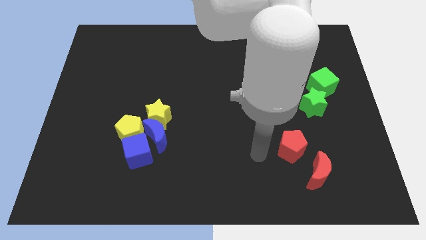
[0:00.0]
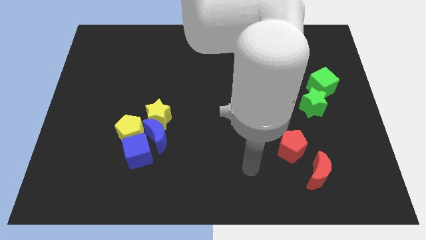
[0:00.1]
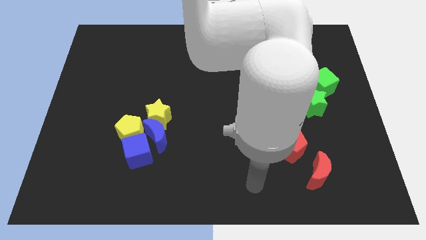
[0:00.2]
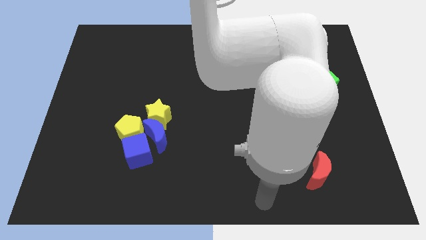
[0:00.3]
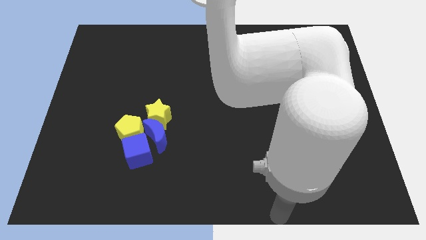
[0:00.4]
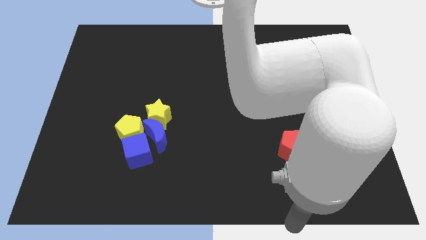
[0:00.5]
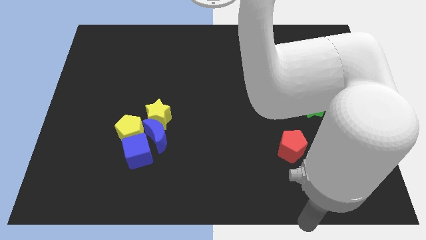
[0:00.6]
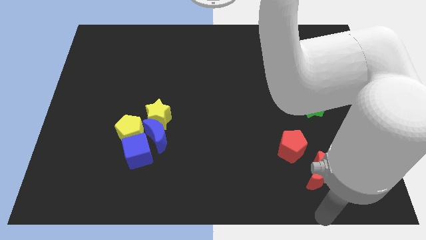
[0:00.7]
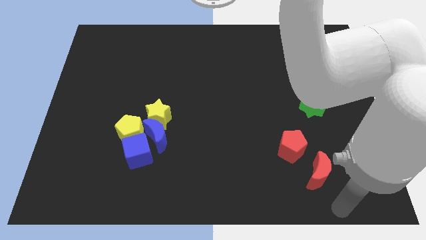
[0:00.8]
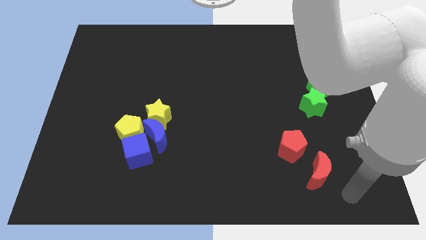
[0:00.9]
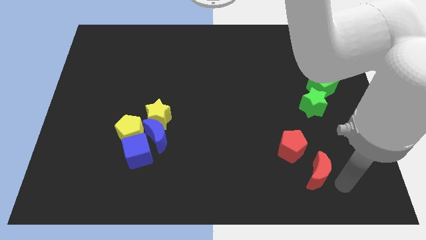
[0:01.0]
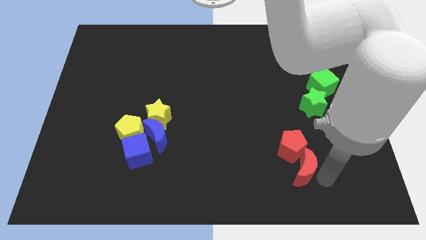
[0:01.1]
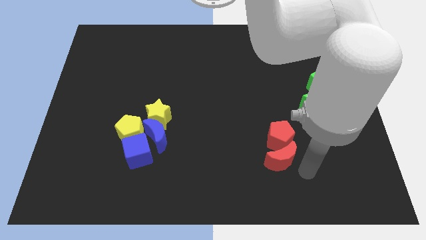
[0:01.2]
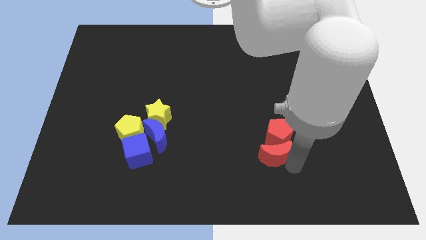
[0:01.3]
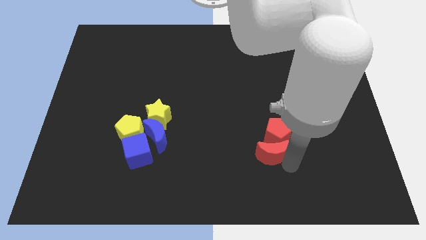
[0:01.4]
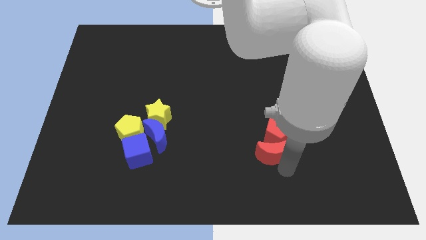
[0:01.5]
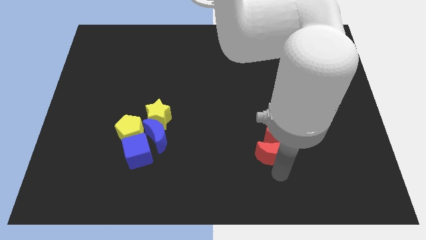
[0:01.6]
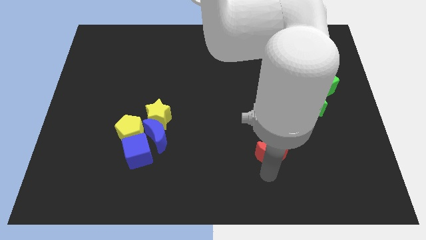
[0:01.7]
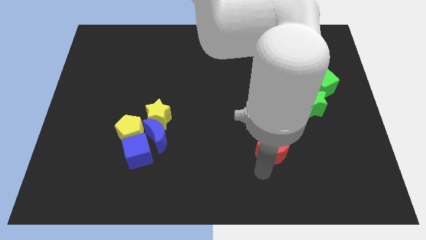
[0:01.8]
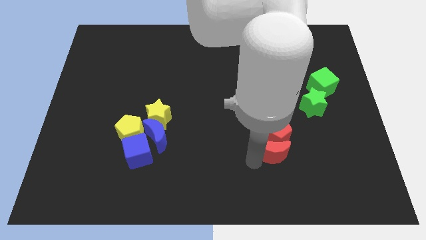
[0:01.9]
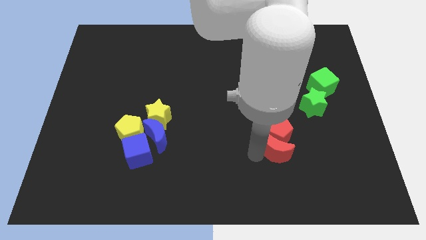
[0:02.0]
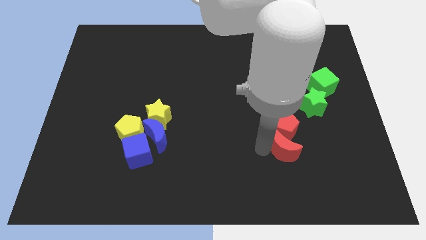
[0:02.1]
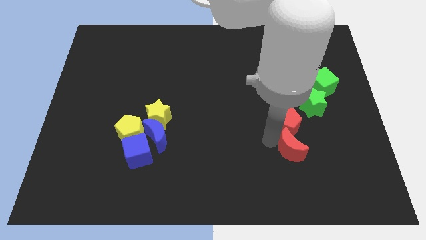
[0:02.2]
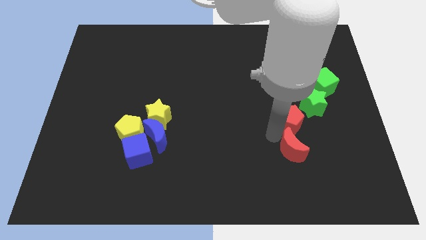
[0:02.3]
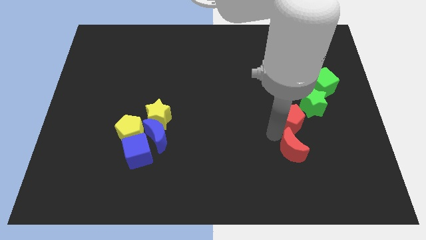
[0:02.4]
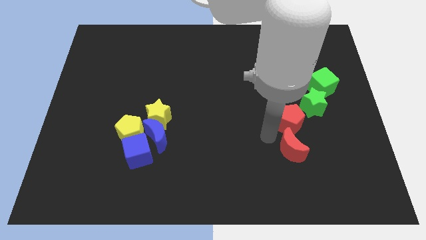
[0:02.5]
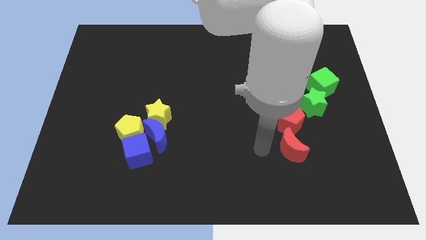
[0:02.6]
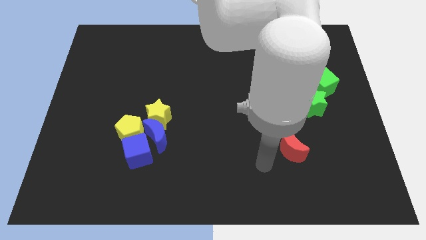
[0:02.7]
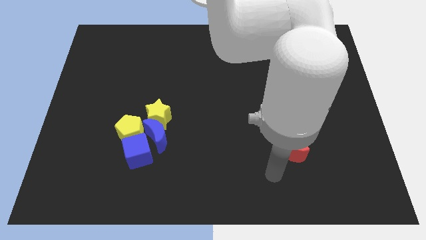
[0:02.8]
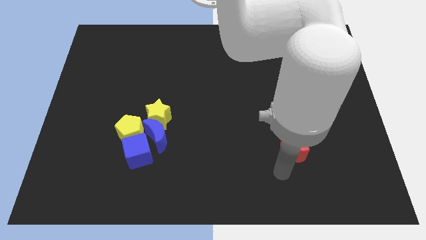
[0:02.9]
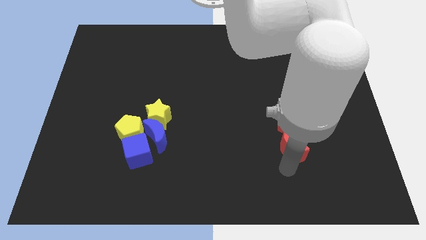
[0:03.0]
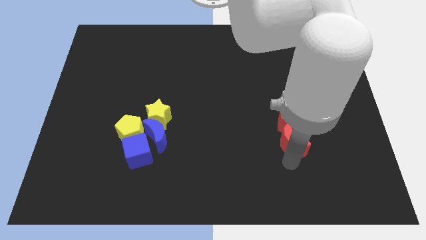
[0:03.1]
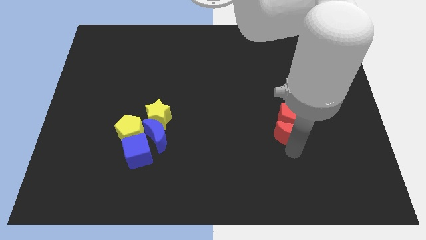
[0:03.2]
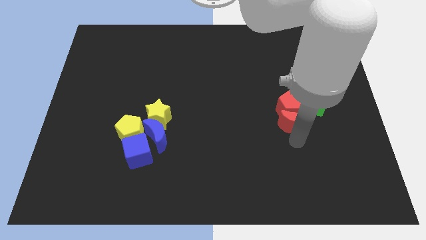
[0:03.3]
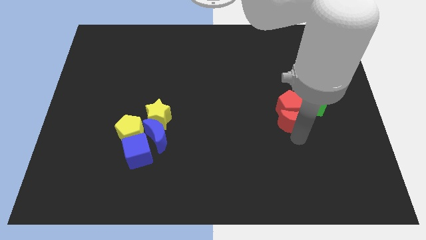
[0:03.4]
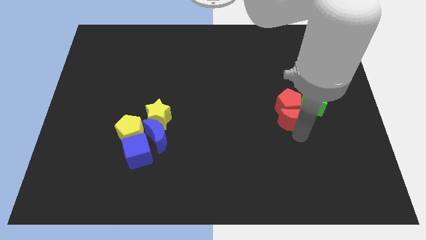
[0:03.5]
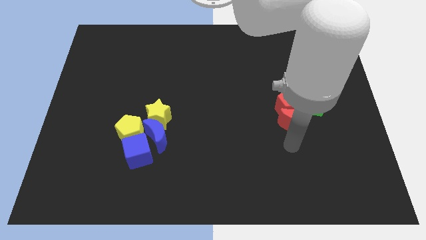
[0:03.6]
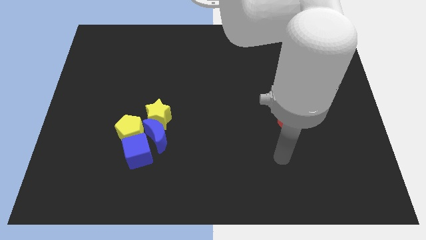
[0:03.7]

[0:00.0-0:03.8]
move the red blocks to the left of the green star

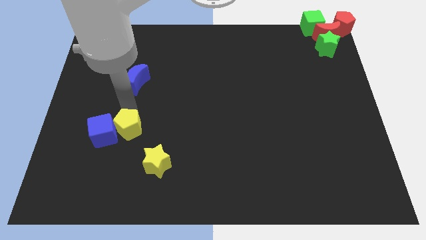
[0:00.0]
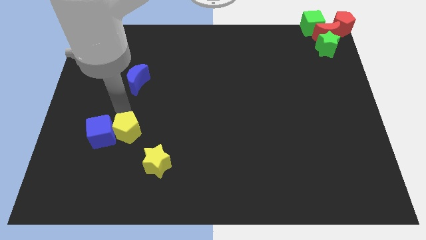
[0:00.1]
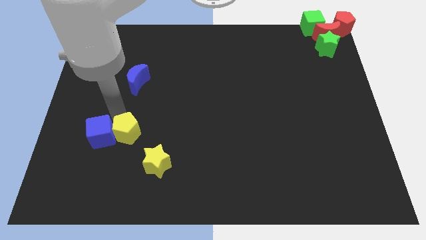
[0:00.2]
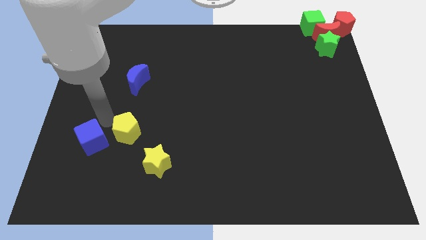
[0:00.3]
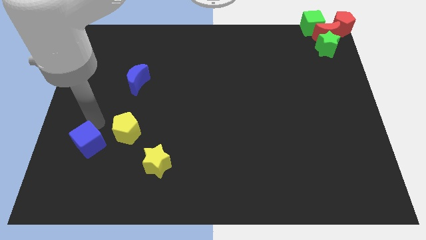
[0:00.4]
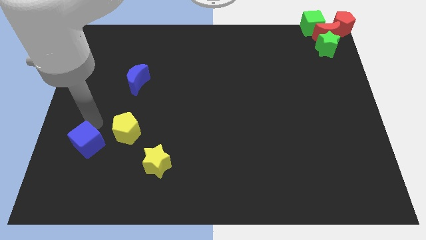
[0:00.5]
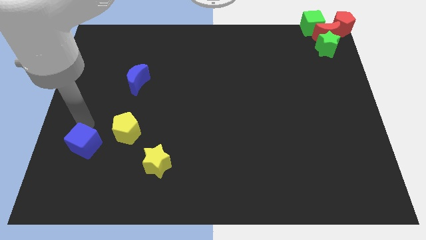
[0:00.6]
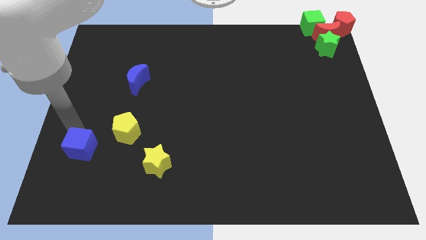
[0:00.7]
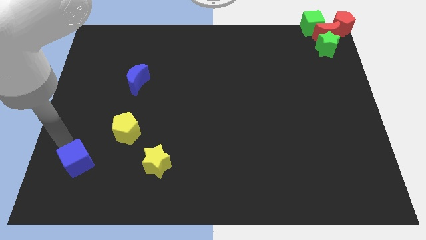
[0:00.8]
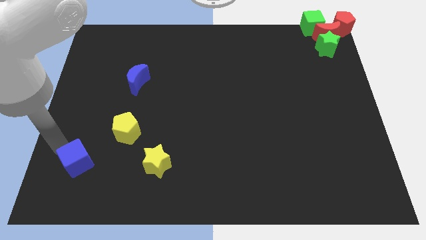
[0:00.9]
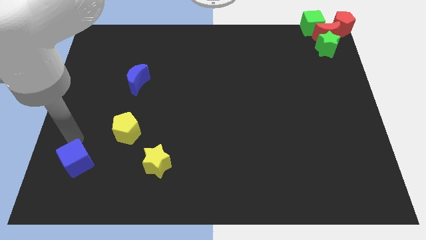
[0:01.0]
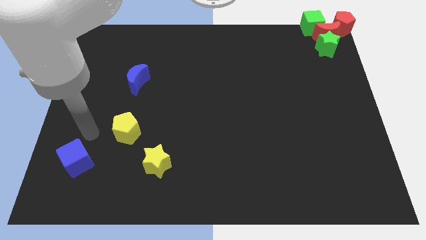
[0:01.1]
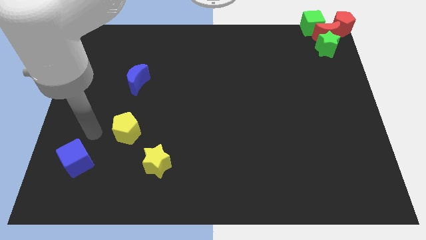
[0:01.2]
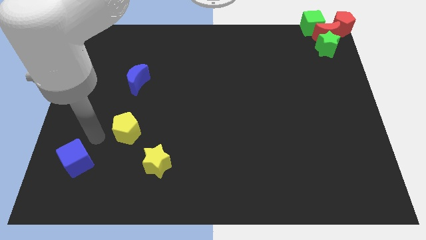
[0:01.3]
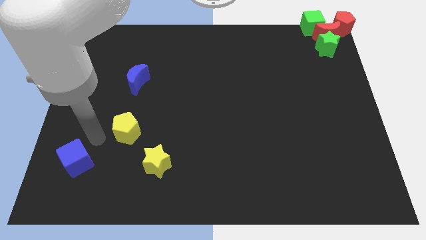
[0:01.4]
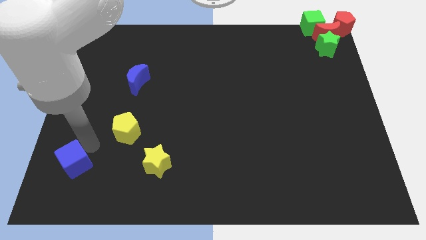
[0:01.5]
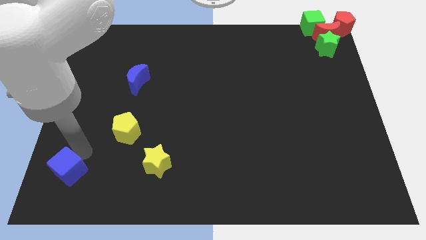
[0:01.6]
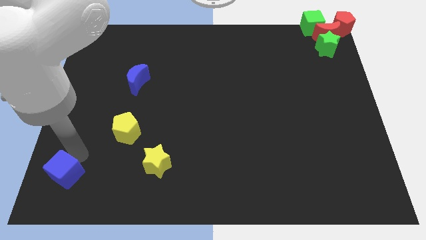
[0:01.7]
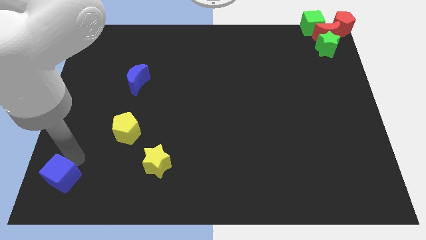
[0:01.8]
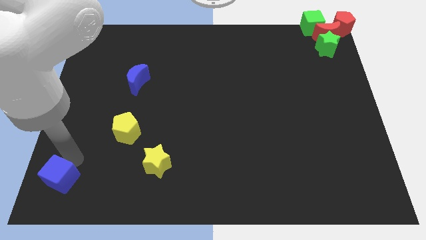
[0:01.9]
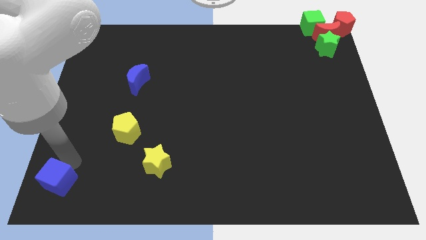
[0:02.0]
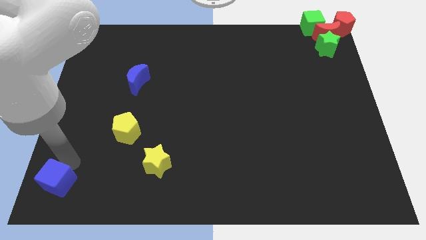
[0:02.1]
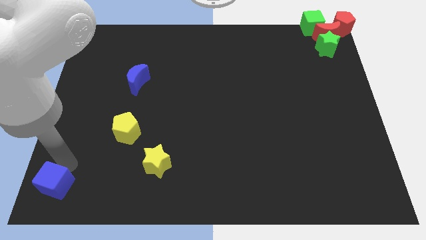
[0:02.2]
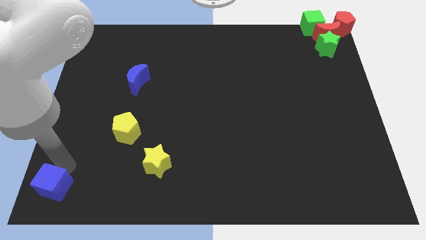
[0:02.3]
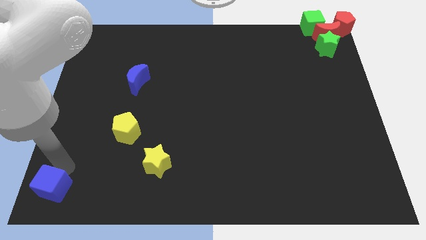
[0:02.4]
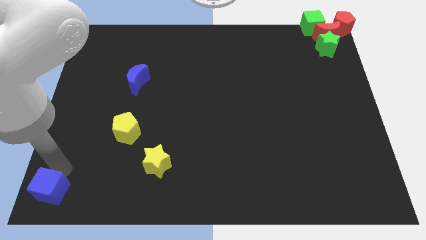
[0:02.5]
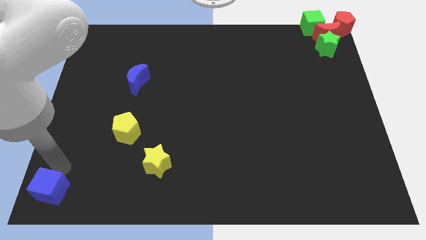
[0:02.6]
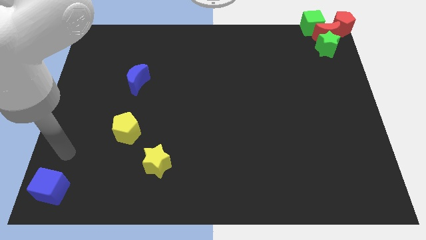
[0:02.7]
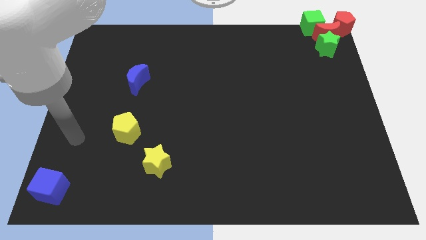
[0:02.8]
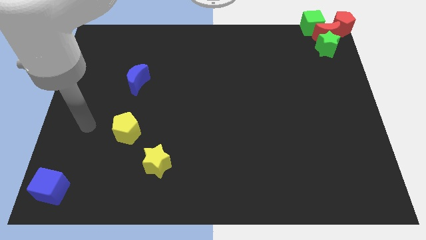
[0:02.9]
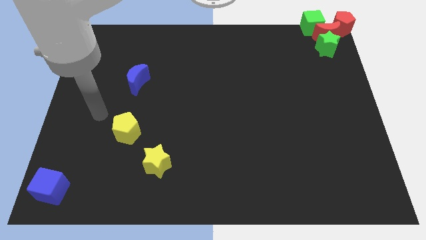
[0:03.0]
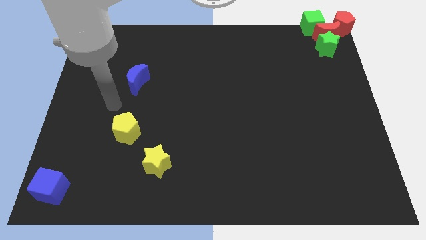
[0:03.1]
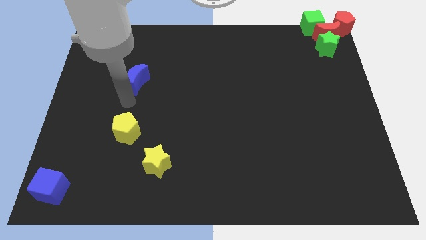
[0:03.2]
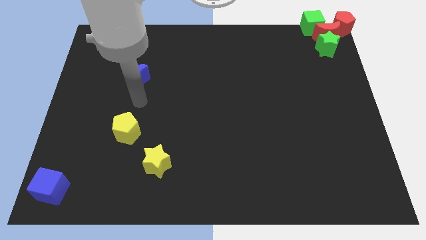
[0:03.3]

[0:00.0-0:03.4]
move the blue cube to the bottom corner of the board

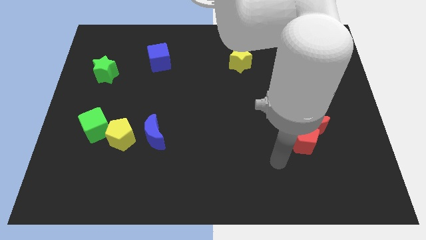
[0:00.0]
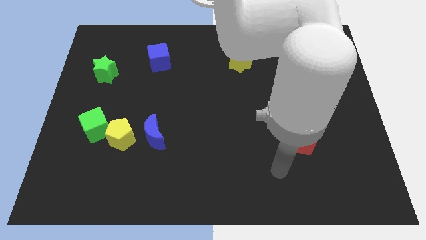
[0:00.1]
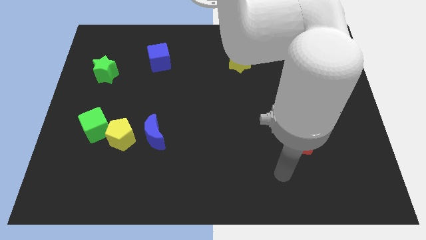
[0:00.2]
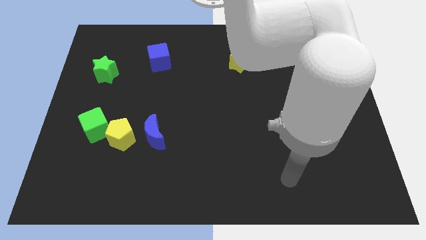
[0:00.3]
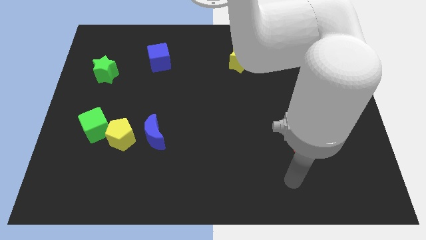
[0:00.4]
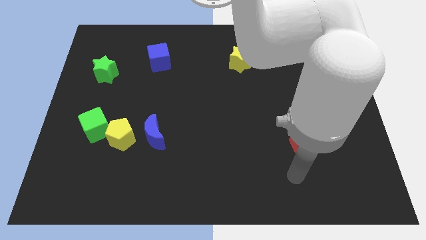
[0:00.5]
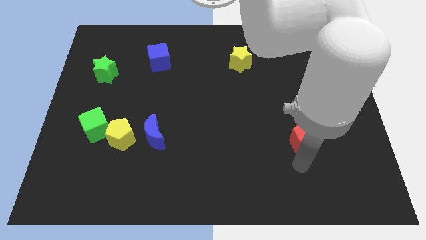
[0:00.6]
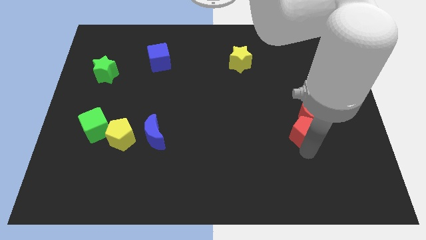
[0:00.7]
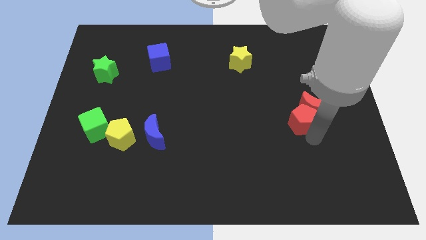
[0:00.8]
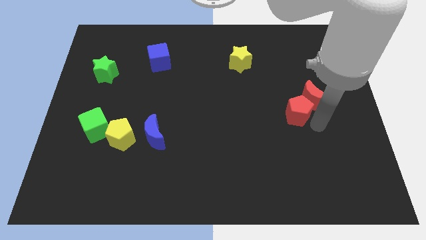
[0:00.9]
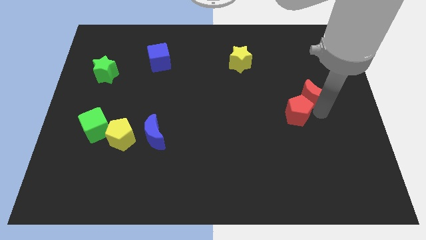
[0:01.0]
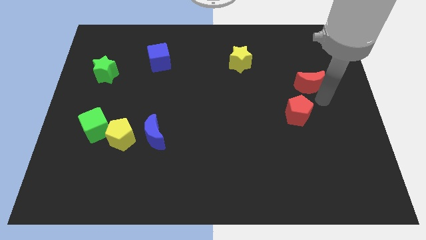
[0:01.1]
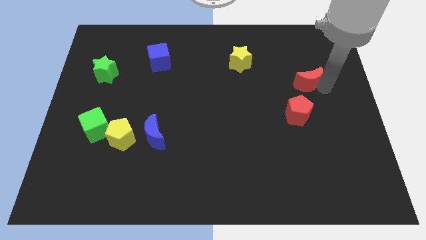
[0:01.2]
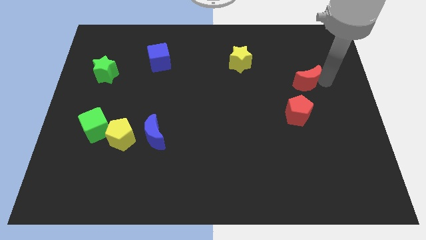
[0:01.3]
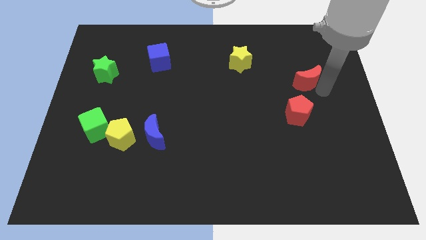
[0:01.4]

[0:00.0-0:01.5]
push red moon away fro the red pentagon
